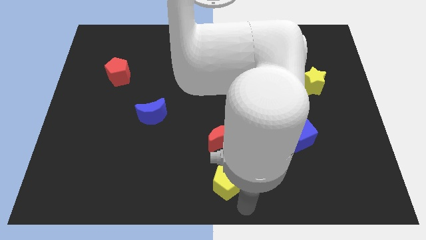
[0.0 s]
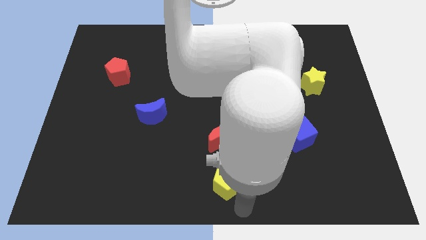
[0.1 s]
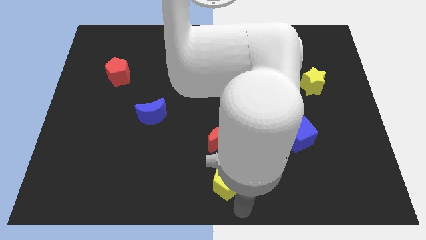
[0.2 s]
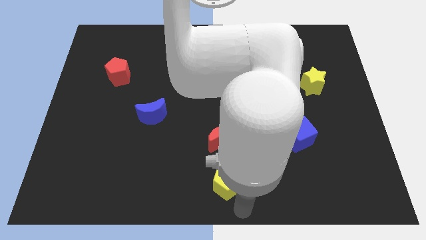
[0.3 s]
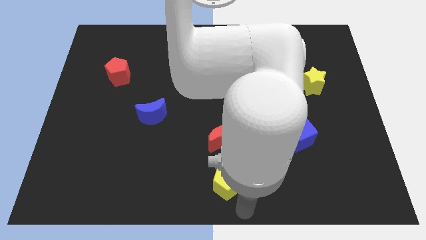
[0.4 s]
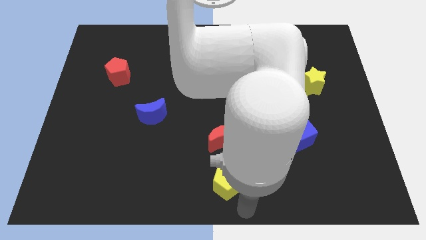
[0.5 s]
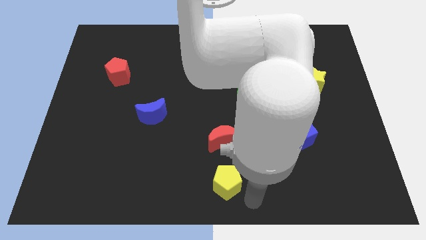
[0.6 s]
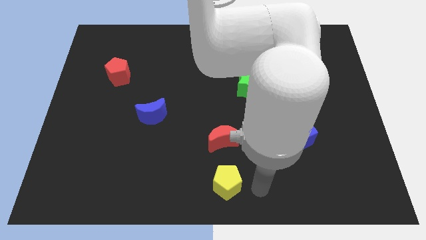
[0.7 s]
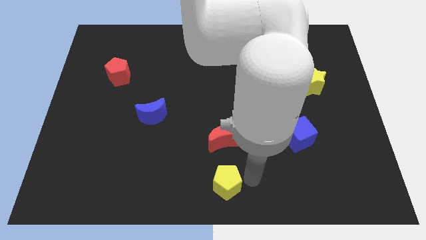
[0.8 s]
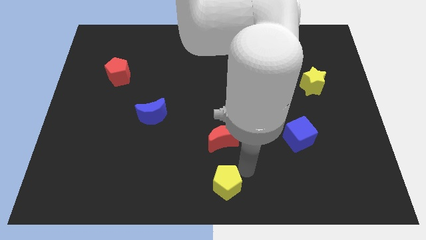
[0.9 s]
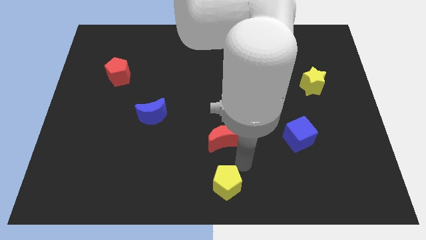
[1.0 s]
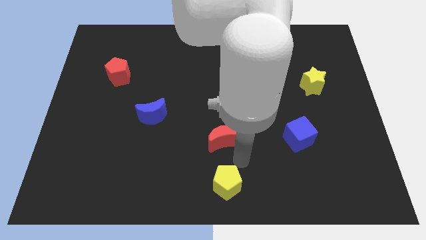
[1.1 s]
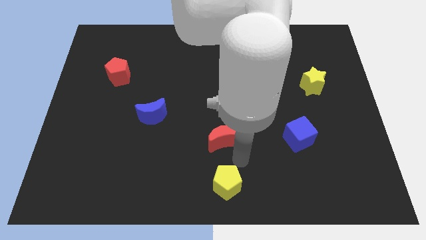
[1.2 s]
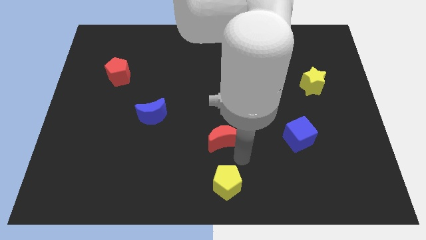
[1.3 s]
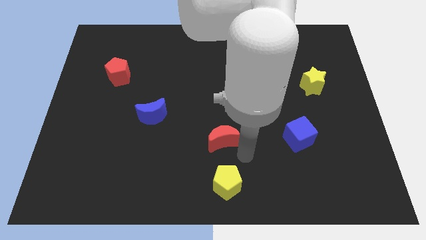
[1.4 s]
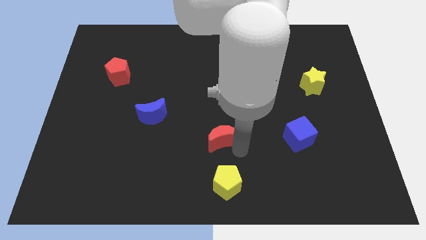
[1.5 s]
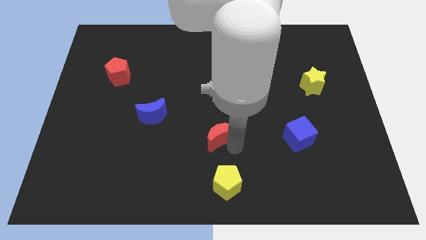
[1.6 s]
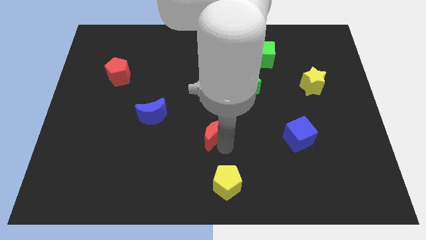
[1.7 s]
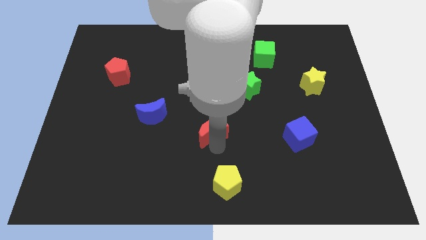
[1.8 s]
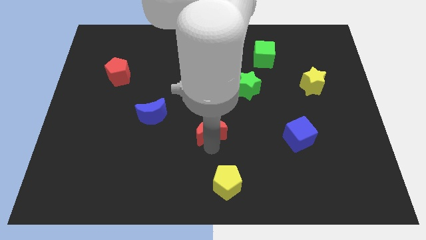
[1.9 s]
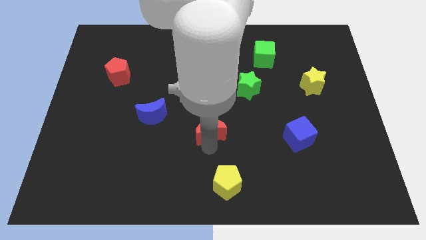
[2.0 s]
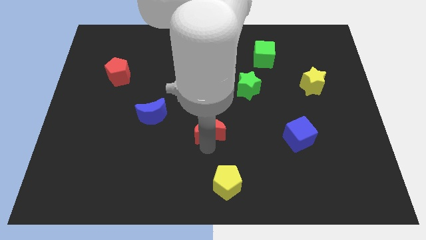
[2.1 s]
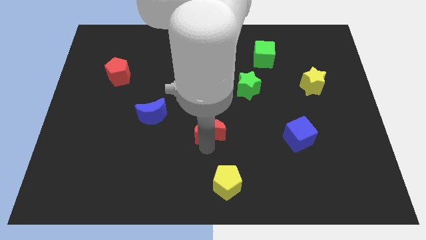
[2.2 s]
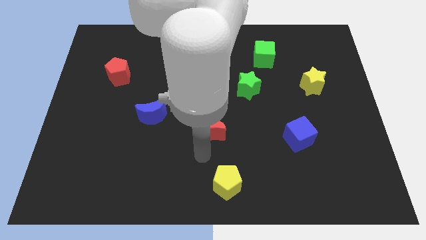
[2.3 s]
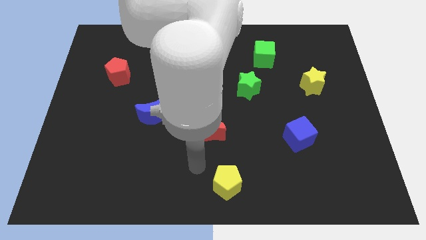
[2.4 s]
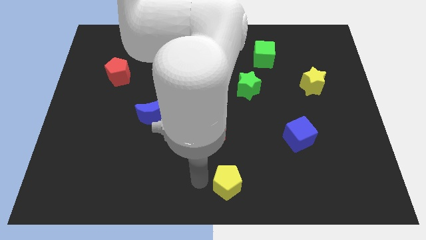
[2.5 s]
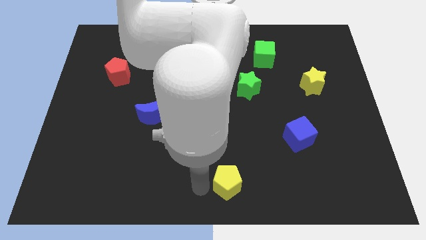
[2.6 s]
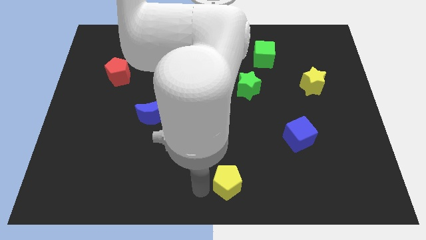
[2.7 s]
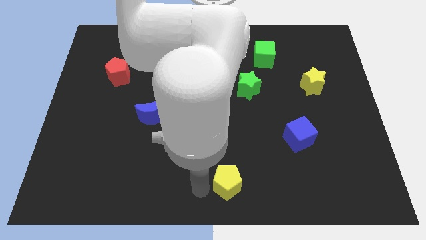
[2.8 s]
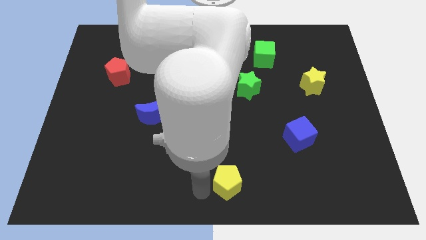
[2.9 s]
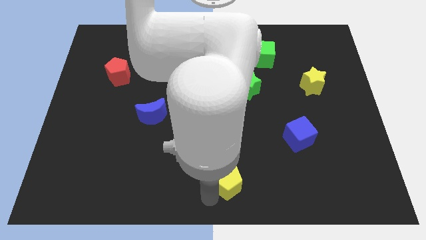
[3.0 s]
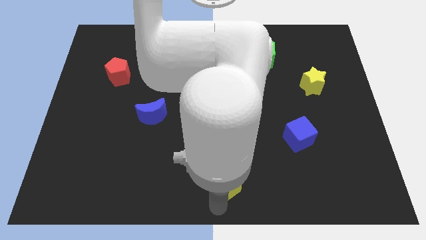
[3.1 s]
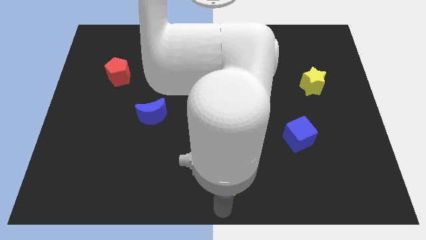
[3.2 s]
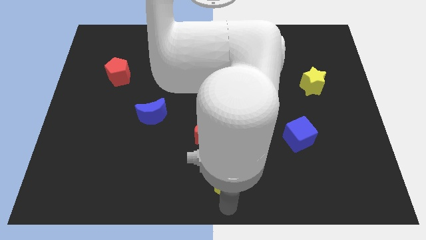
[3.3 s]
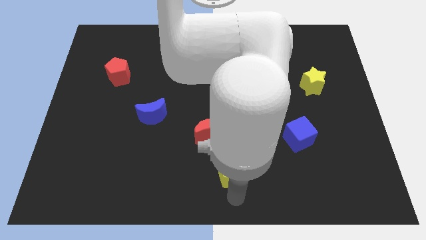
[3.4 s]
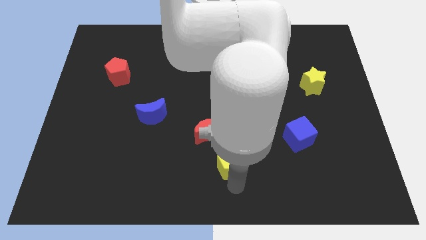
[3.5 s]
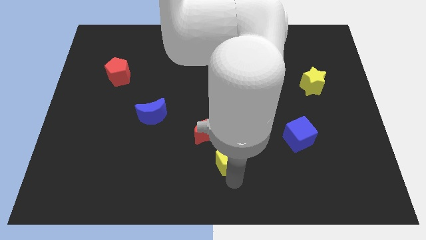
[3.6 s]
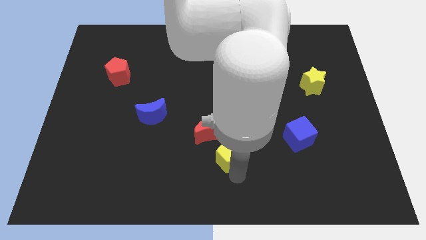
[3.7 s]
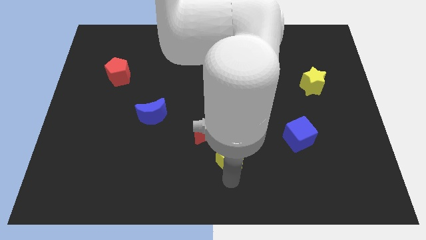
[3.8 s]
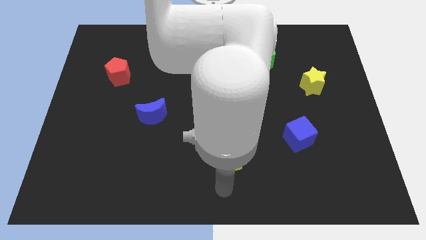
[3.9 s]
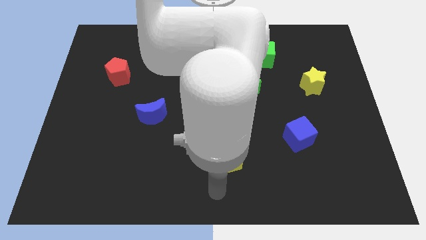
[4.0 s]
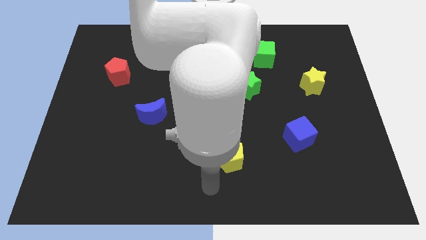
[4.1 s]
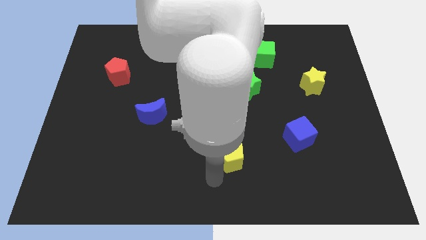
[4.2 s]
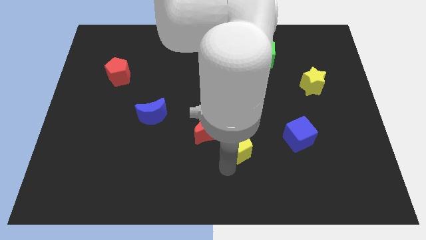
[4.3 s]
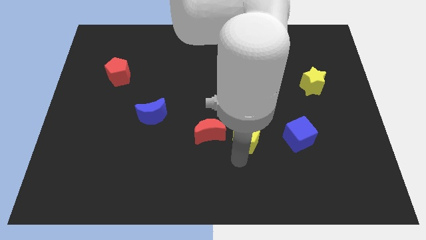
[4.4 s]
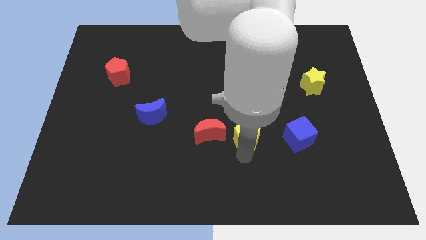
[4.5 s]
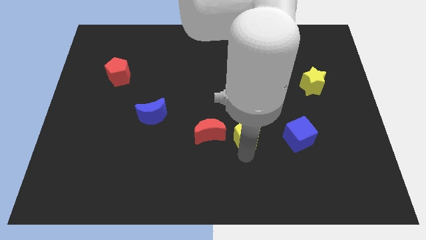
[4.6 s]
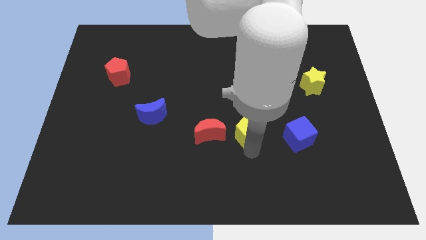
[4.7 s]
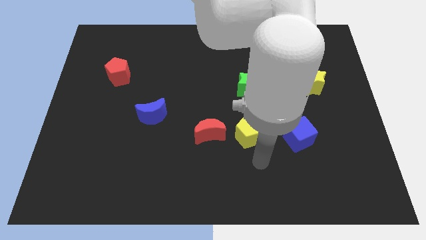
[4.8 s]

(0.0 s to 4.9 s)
place the red moon and yellow pentagon in a horizontal line at the left side of the blue cube

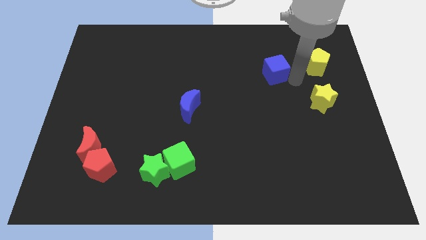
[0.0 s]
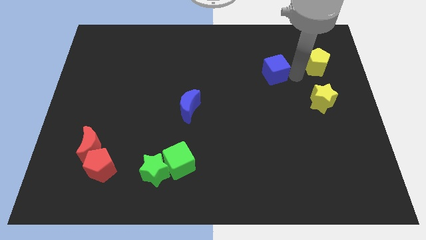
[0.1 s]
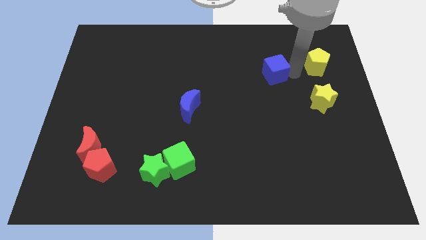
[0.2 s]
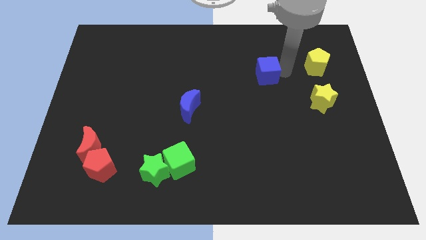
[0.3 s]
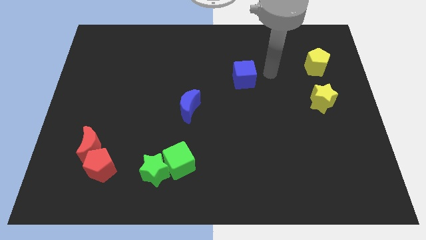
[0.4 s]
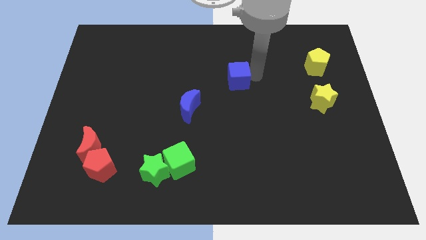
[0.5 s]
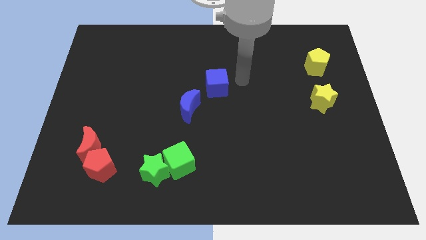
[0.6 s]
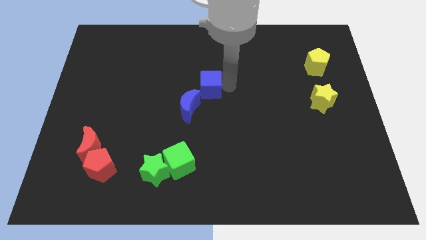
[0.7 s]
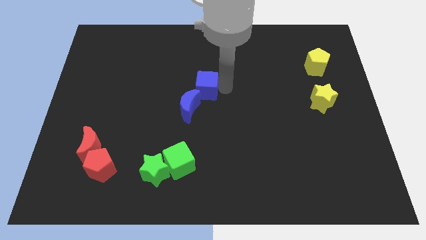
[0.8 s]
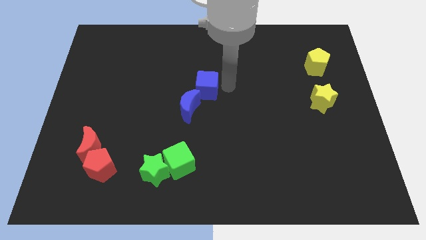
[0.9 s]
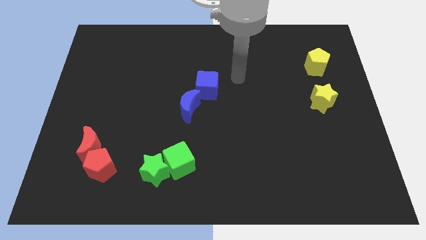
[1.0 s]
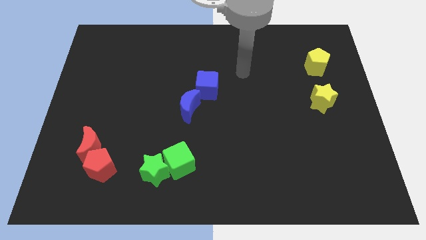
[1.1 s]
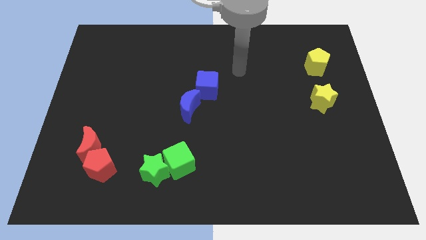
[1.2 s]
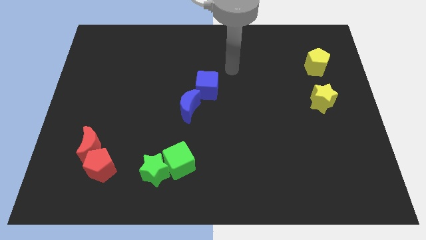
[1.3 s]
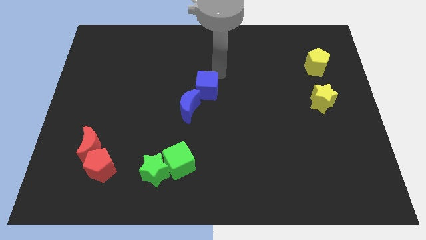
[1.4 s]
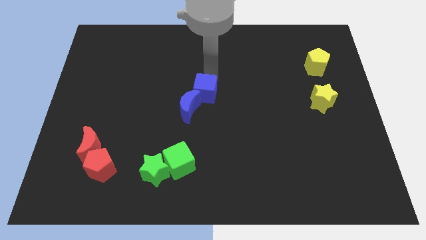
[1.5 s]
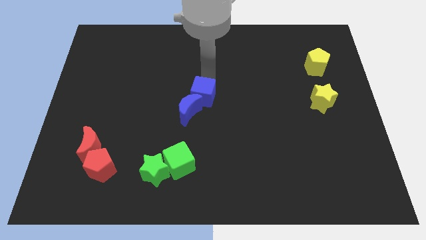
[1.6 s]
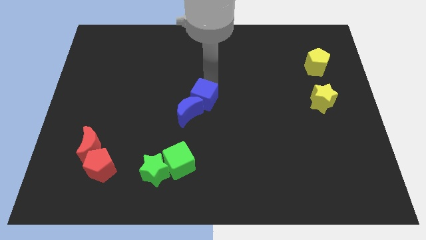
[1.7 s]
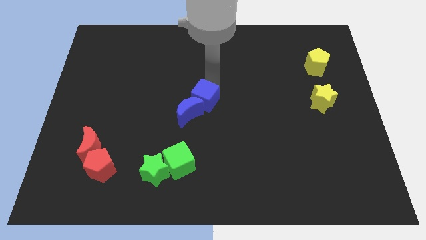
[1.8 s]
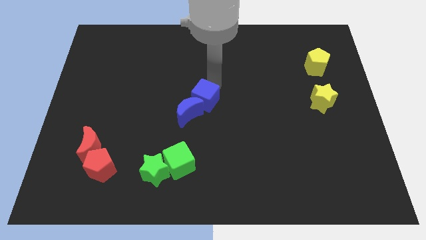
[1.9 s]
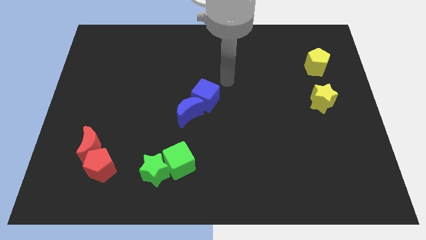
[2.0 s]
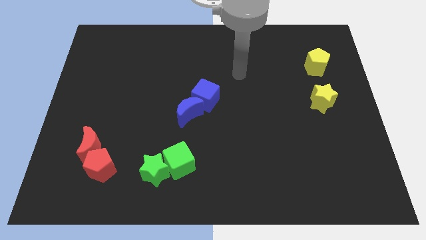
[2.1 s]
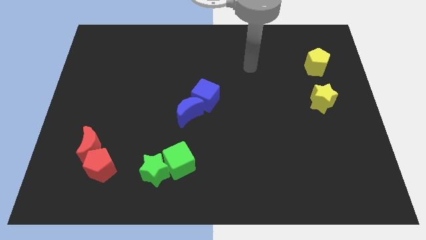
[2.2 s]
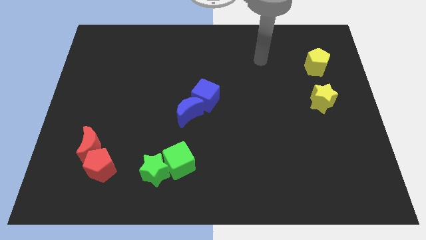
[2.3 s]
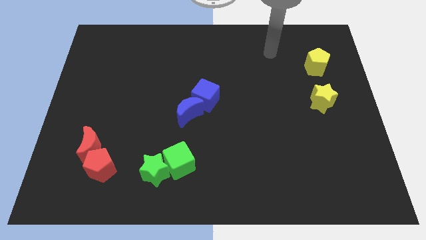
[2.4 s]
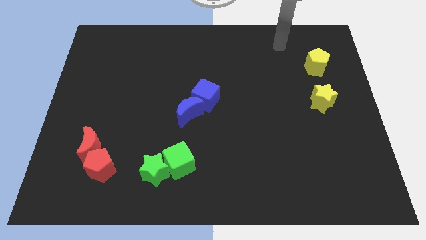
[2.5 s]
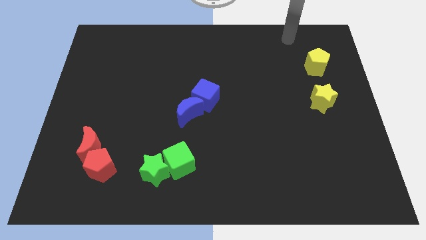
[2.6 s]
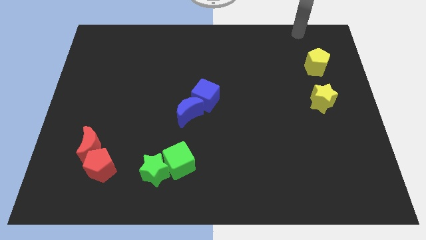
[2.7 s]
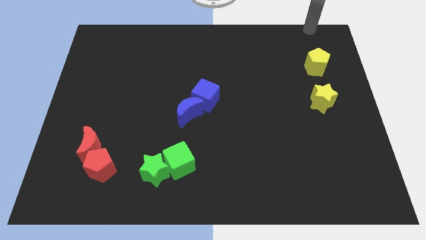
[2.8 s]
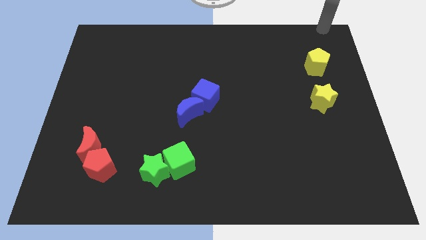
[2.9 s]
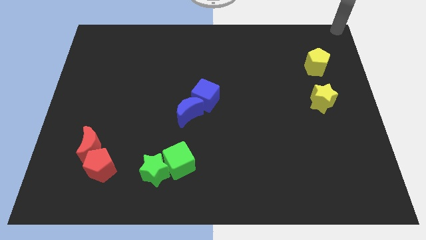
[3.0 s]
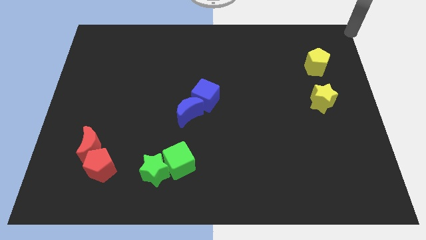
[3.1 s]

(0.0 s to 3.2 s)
place the arm on the top right corner of the board

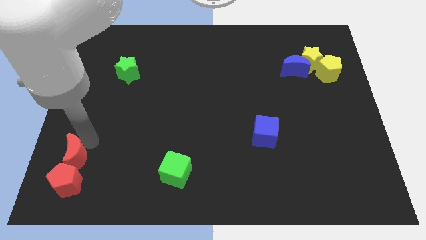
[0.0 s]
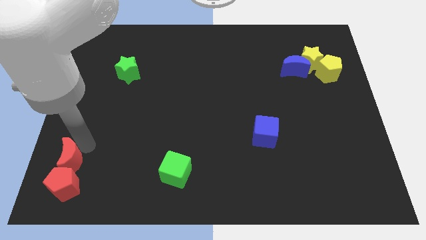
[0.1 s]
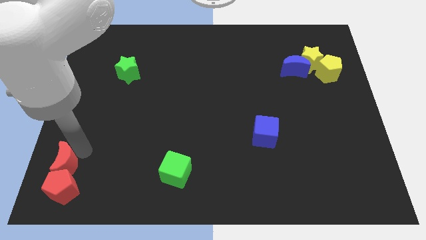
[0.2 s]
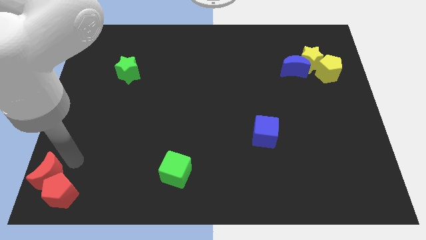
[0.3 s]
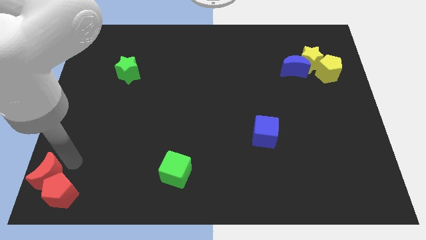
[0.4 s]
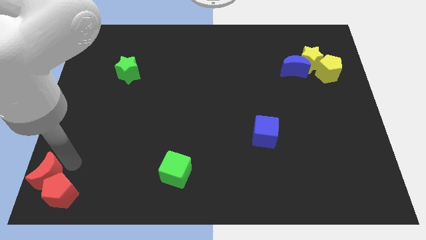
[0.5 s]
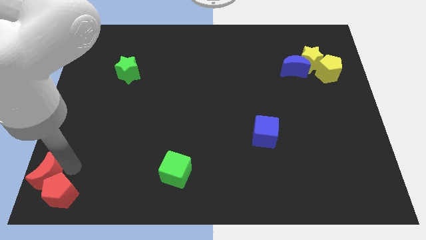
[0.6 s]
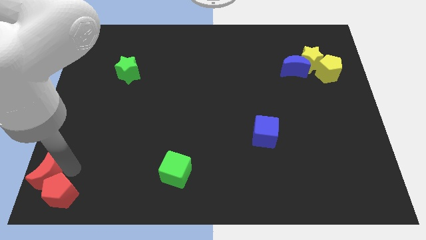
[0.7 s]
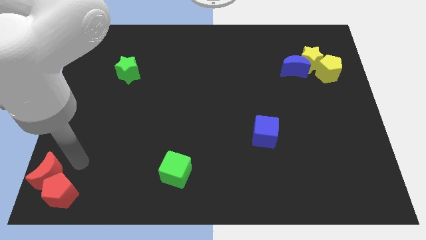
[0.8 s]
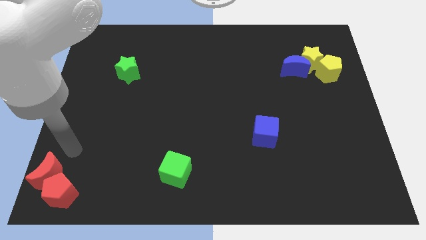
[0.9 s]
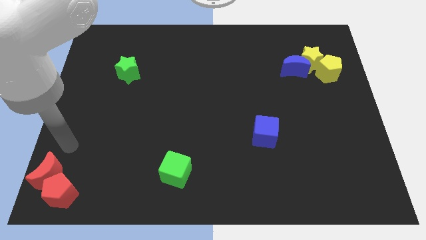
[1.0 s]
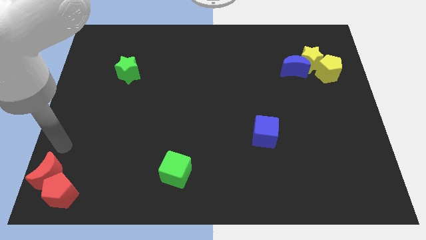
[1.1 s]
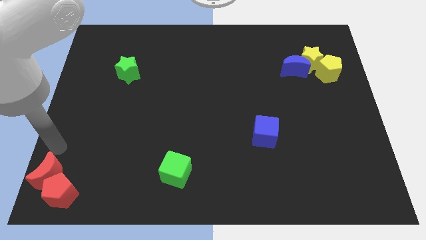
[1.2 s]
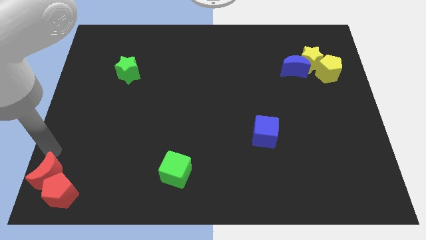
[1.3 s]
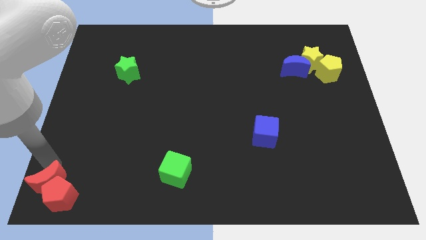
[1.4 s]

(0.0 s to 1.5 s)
push red blocks to the bottom left of the board
